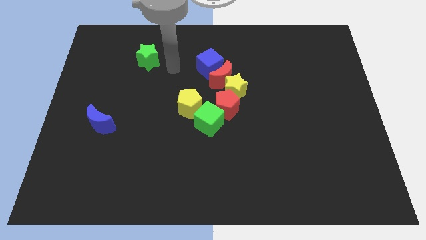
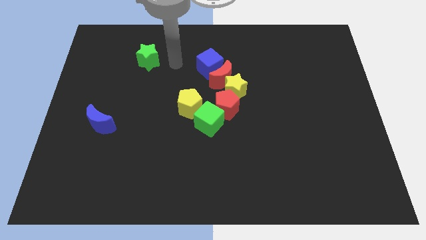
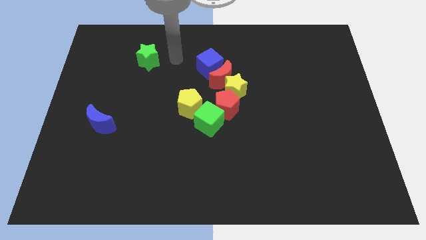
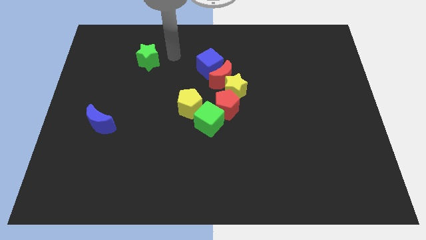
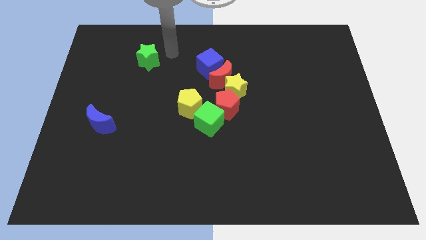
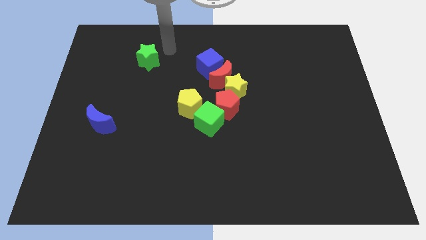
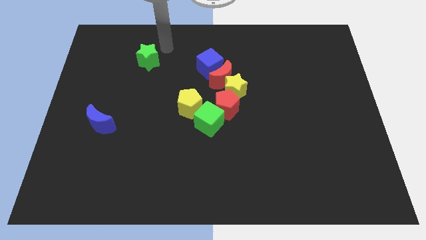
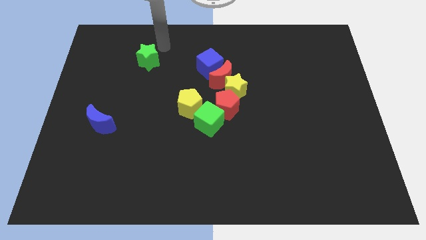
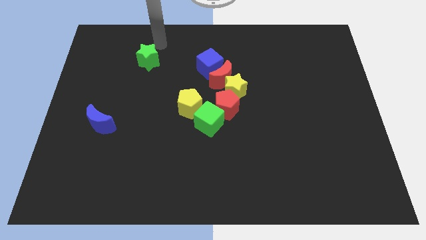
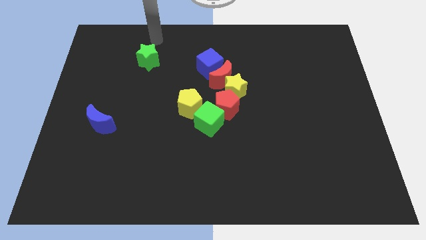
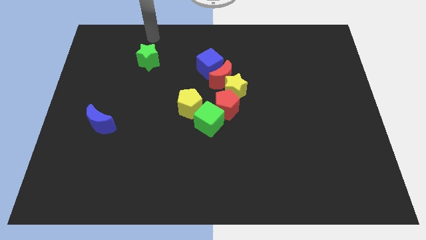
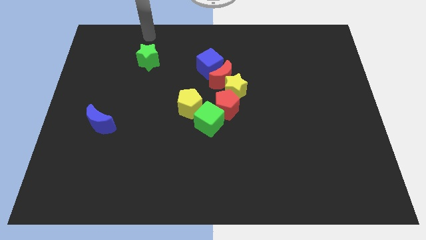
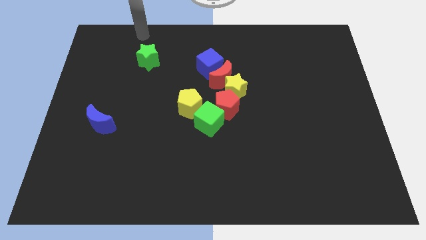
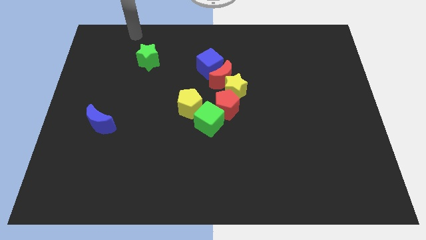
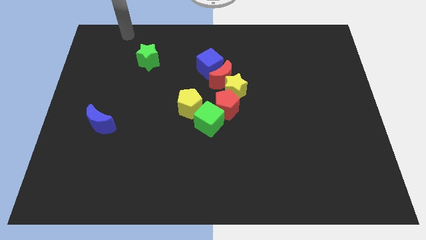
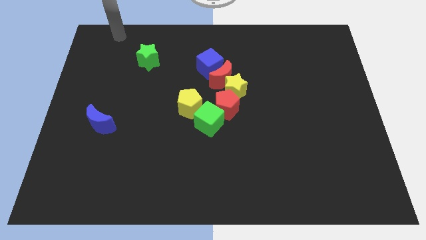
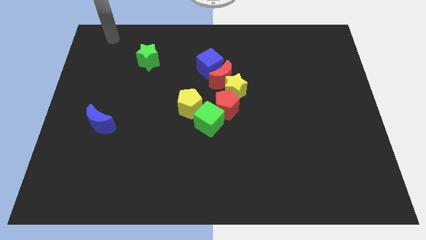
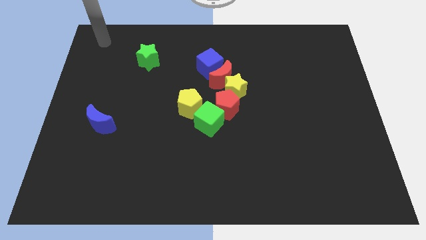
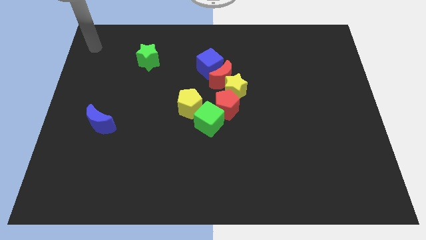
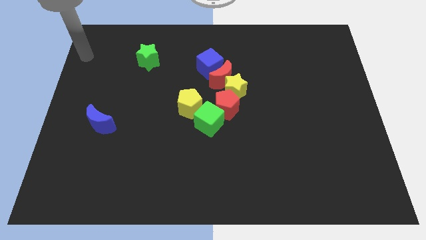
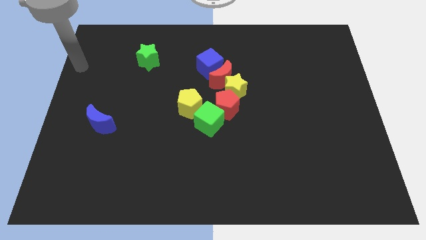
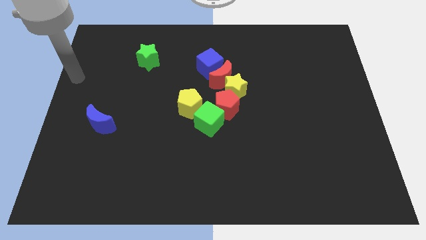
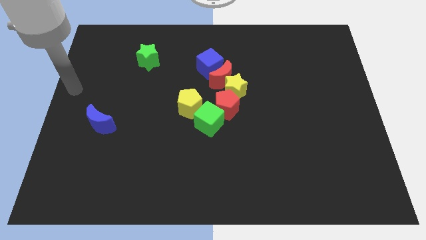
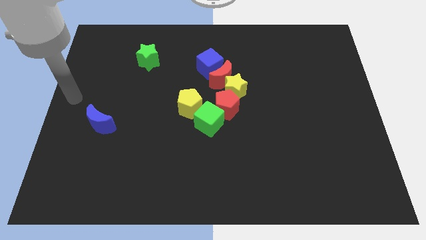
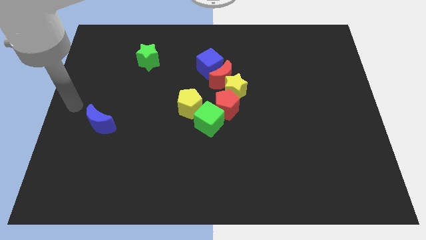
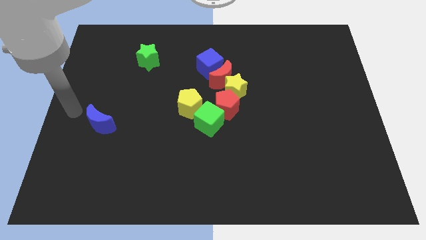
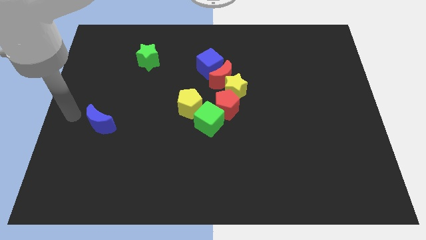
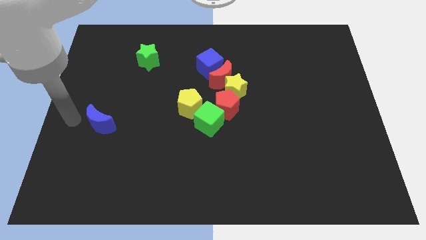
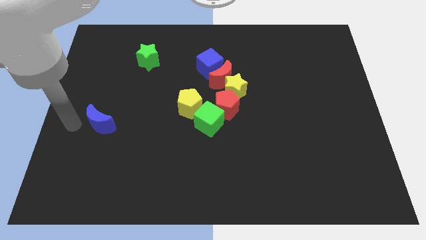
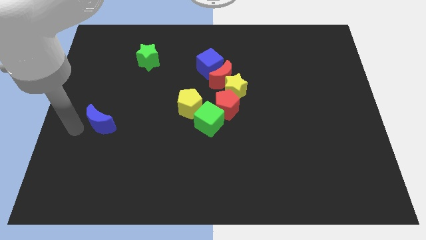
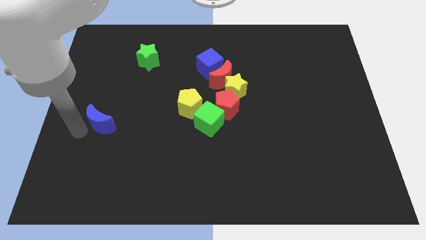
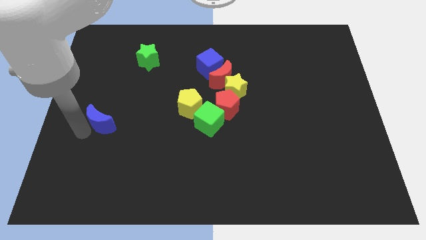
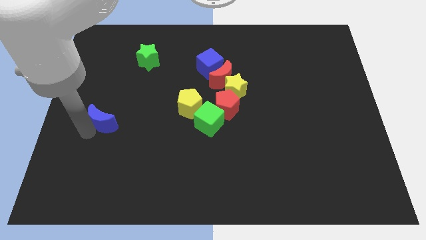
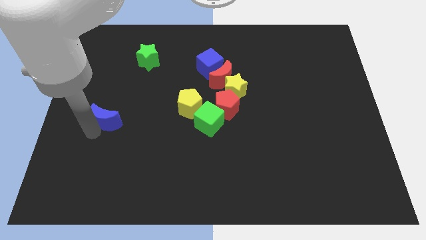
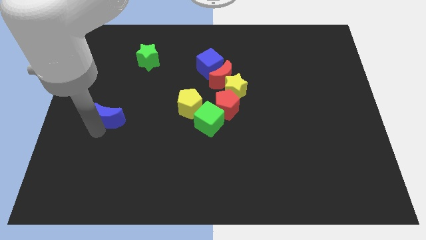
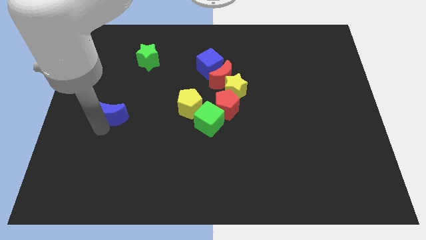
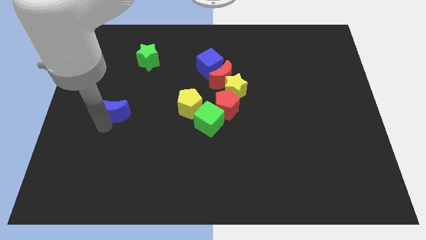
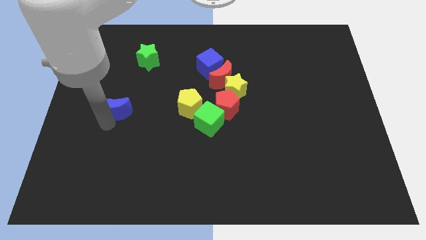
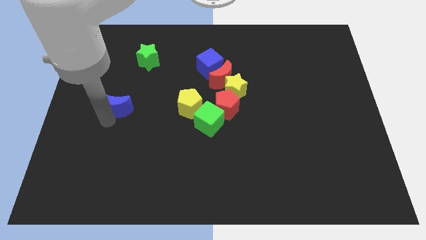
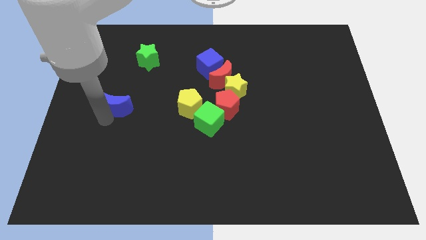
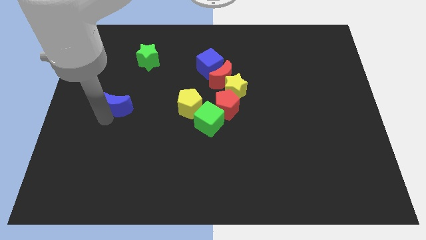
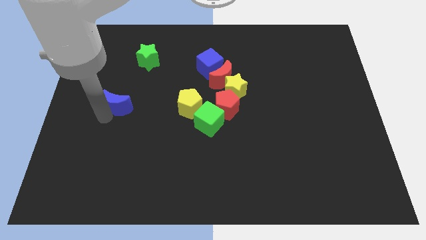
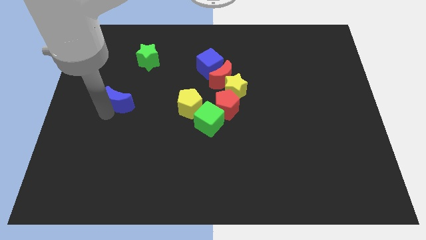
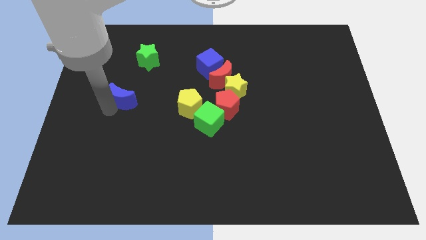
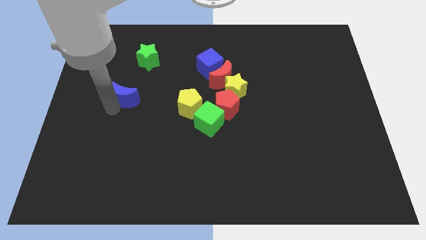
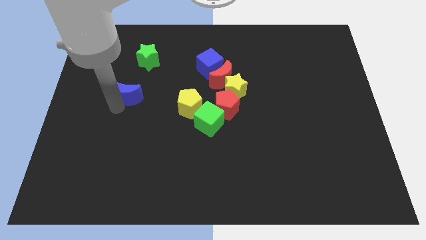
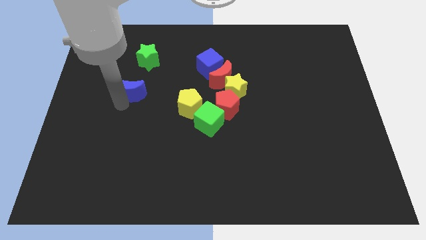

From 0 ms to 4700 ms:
move the blue moon diagonal bottom left to green star

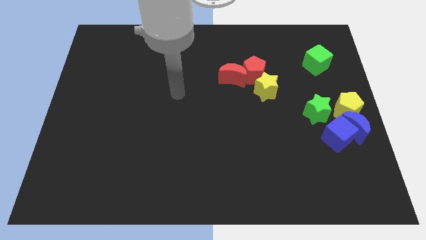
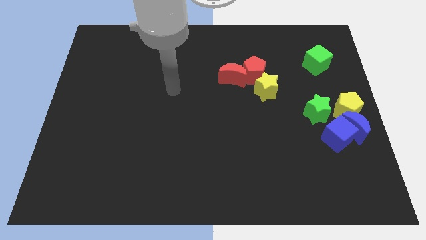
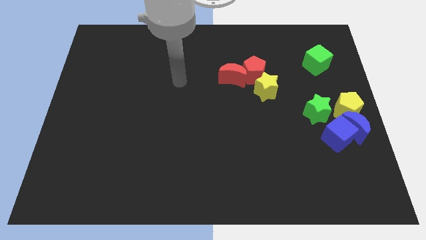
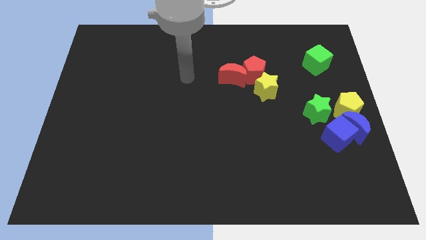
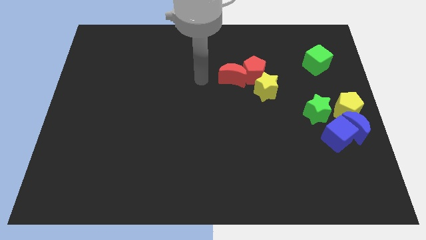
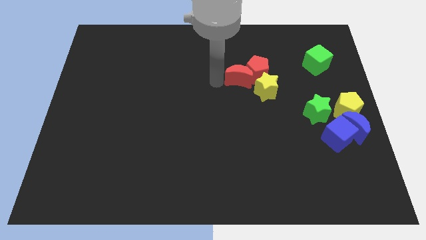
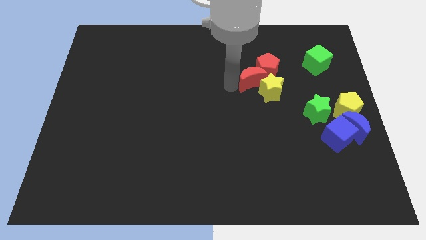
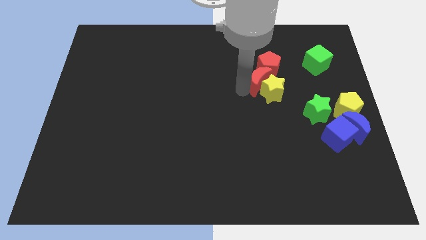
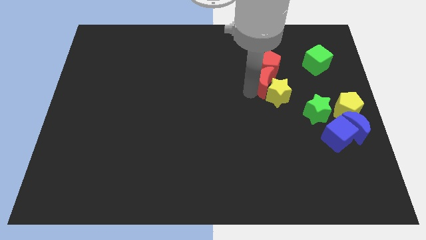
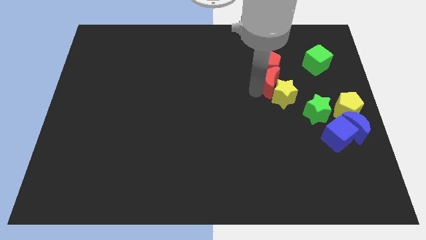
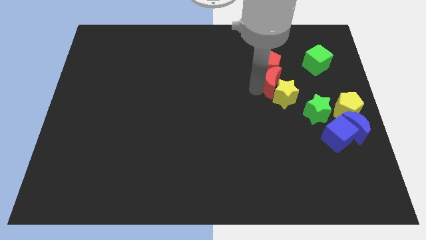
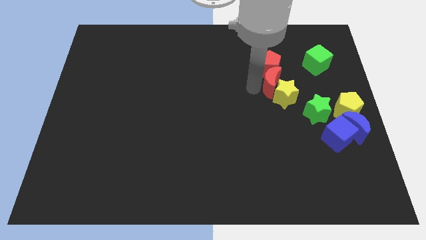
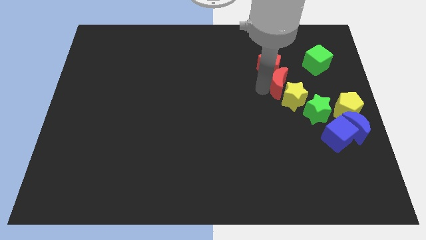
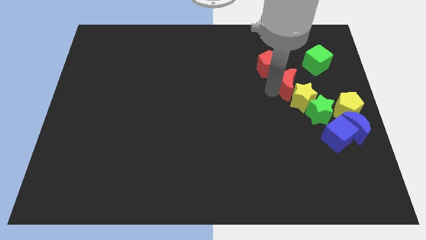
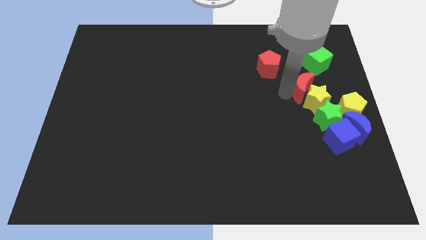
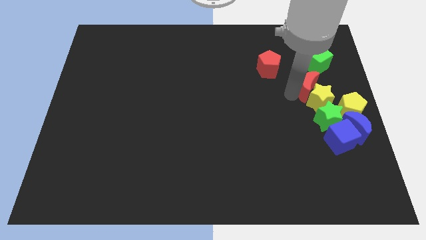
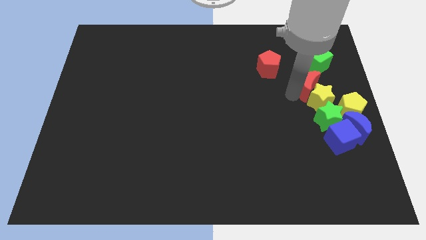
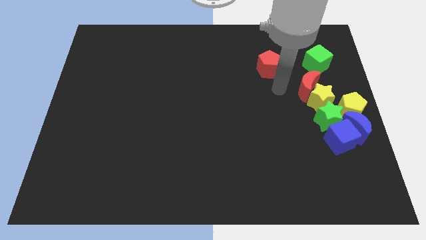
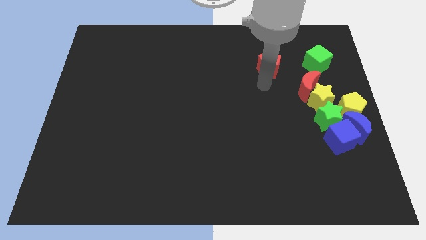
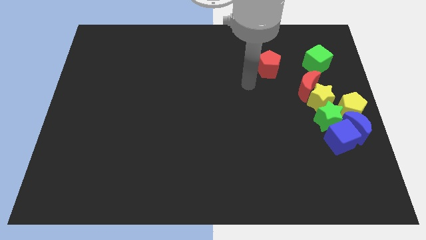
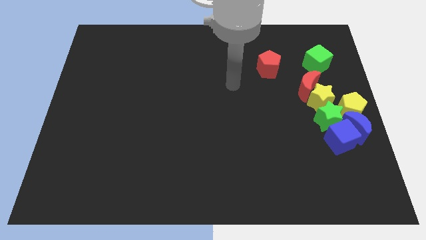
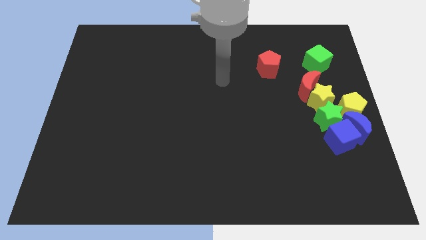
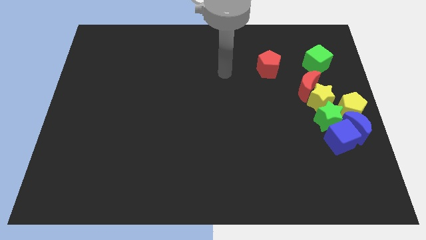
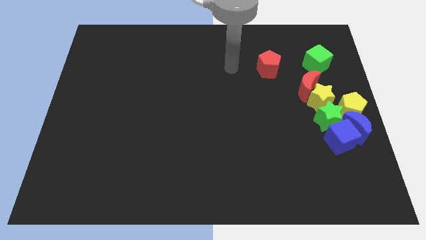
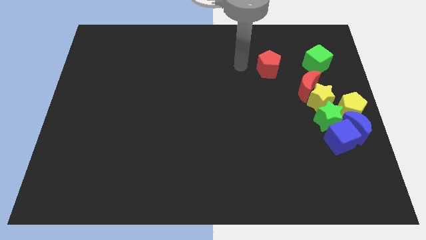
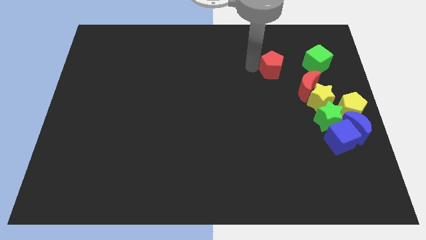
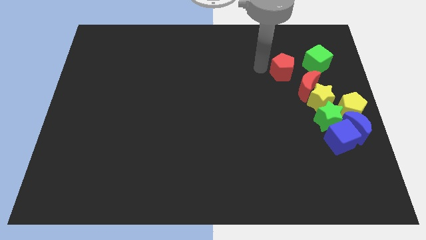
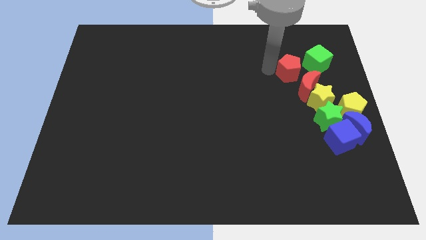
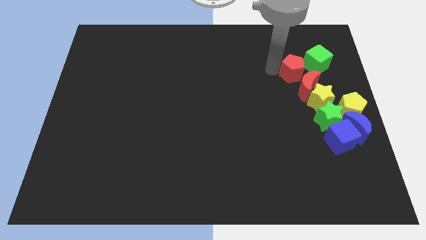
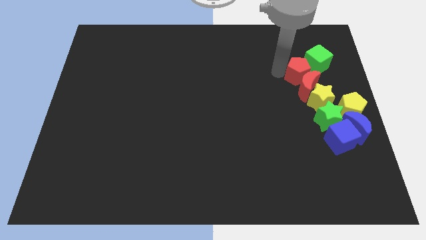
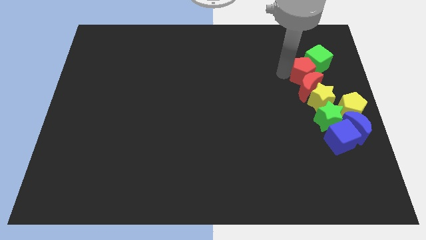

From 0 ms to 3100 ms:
push the yellow star and red blocks towards the right side of the board

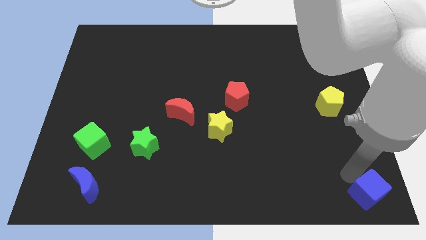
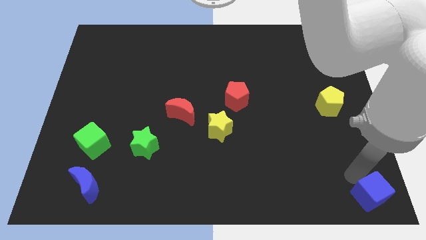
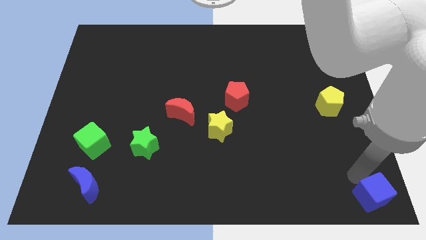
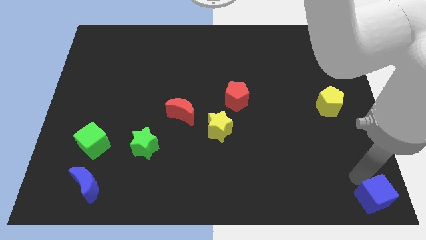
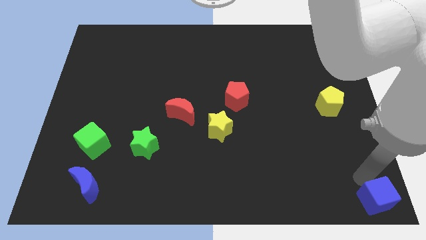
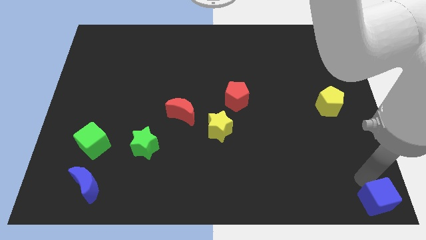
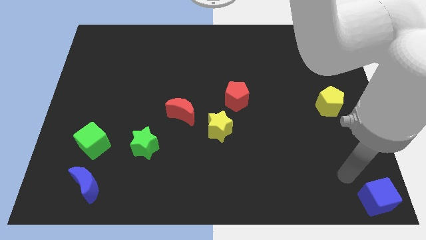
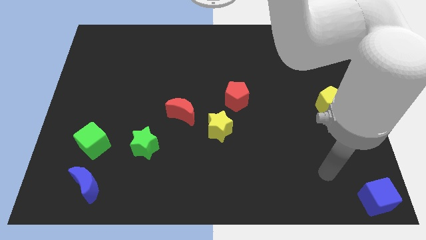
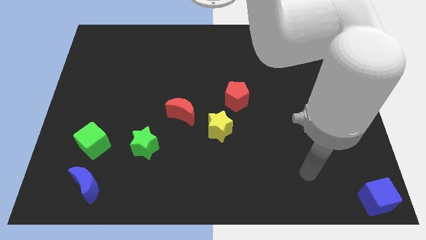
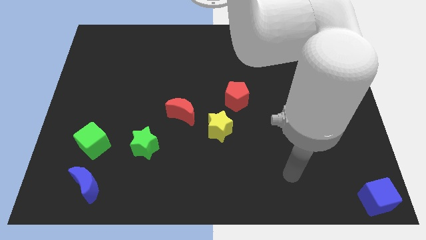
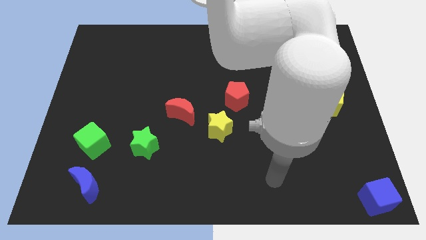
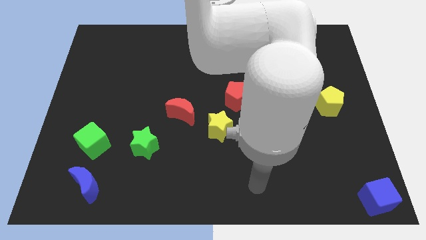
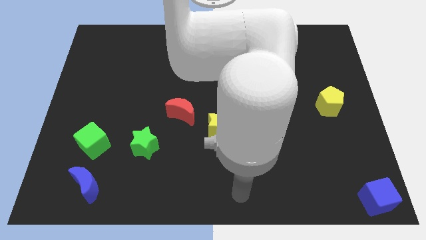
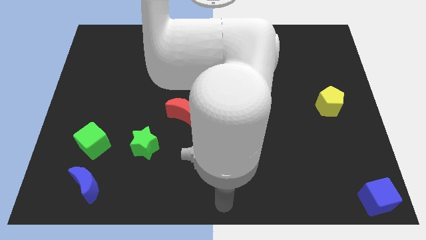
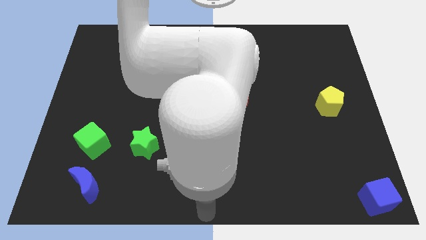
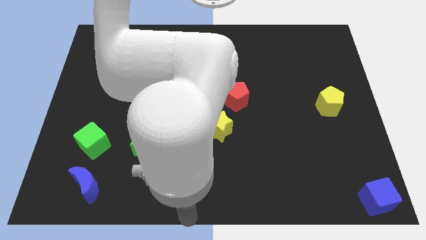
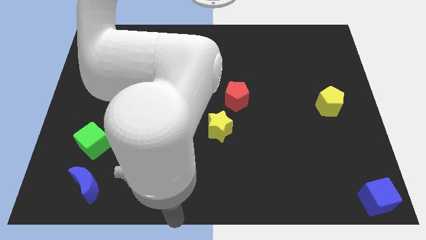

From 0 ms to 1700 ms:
slightly push the blue cube to the bottom right corner
